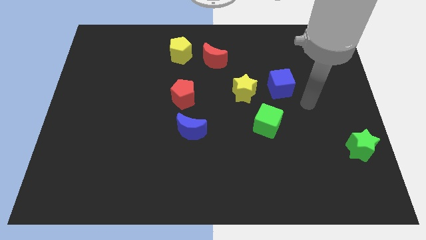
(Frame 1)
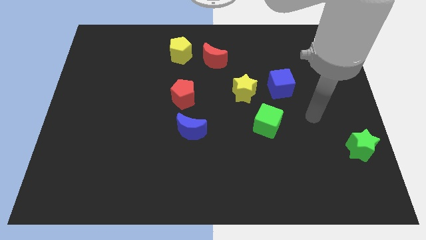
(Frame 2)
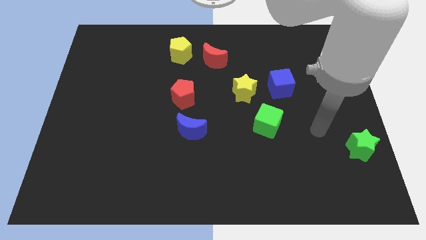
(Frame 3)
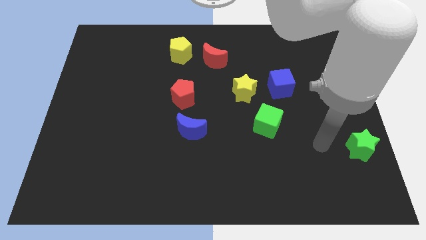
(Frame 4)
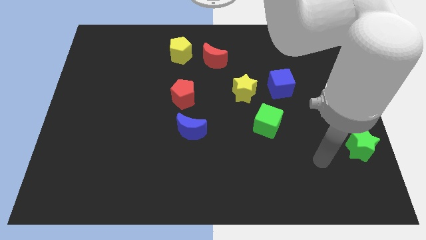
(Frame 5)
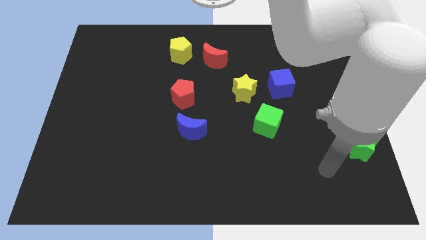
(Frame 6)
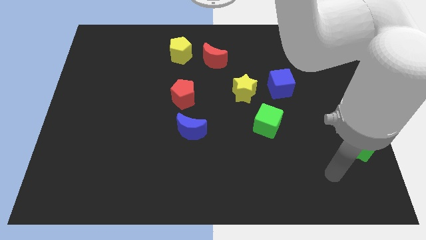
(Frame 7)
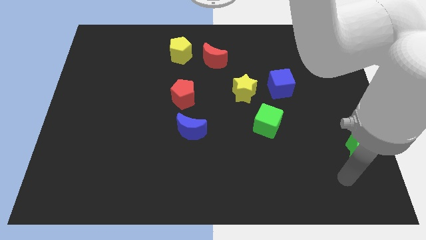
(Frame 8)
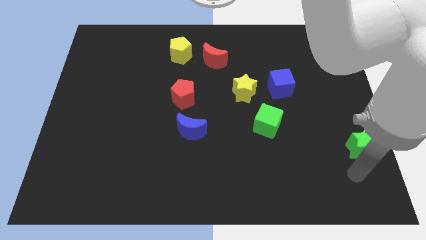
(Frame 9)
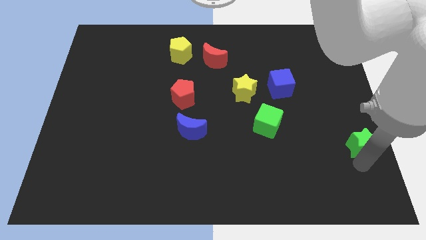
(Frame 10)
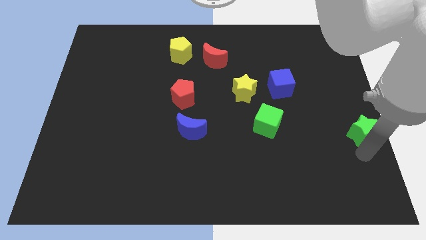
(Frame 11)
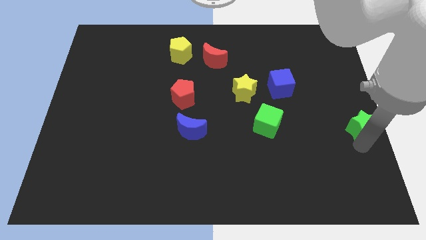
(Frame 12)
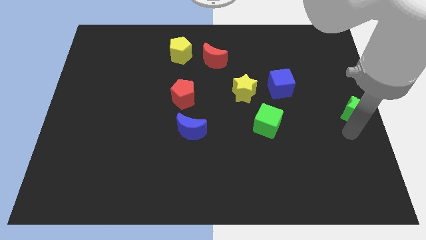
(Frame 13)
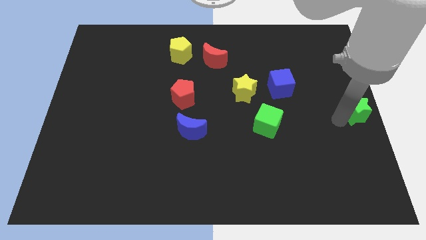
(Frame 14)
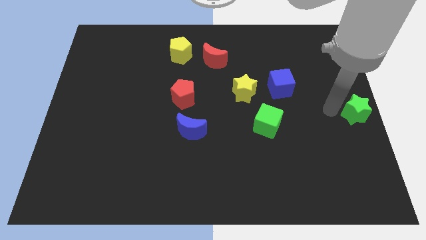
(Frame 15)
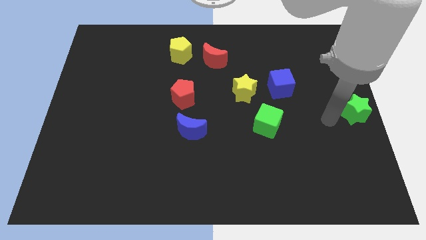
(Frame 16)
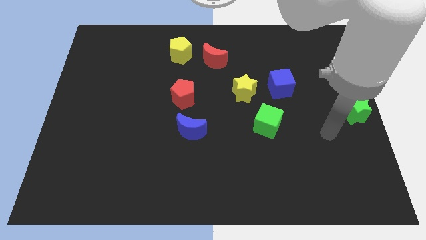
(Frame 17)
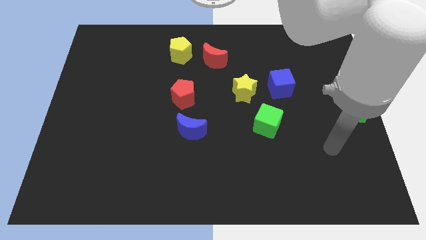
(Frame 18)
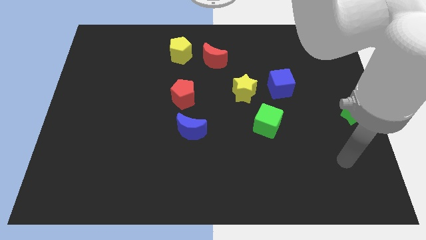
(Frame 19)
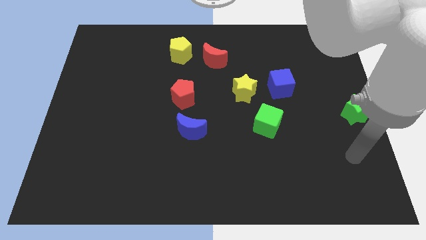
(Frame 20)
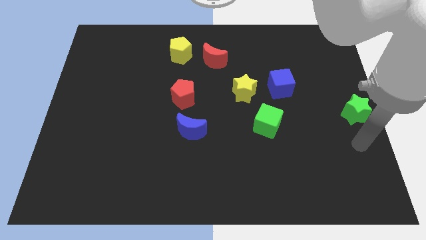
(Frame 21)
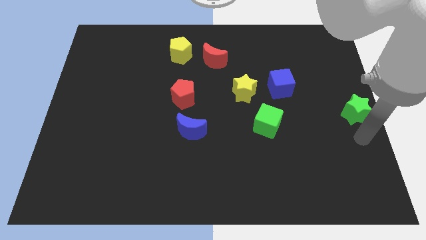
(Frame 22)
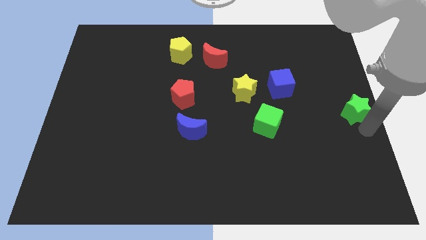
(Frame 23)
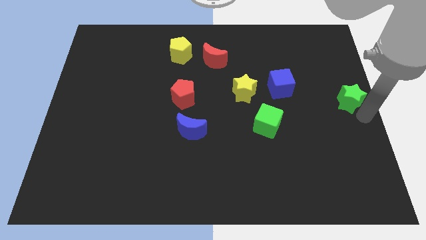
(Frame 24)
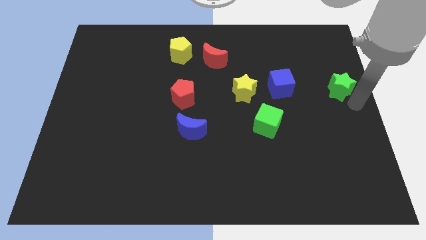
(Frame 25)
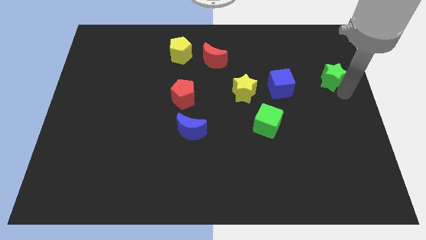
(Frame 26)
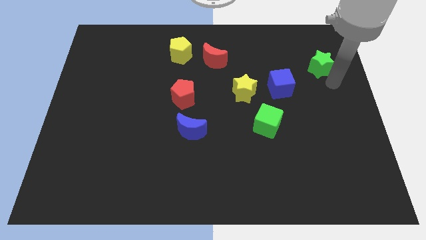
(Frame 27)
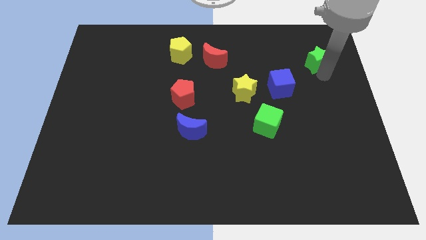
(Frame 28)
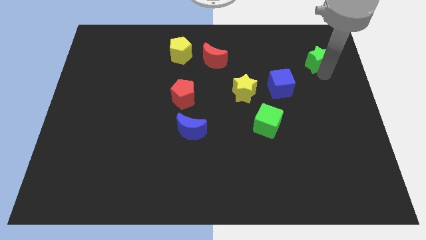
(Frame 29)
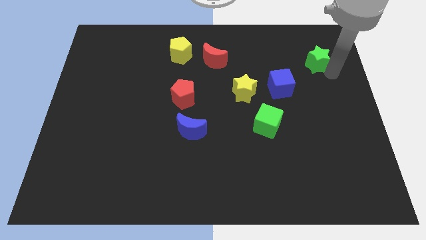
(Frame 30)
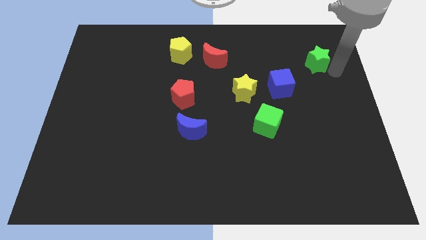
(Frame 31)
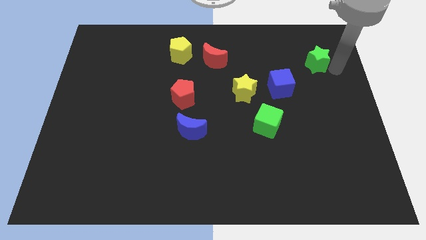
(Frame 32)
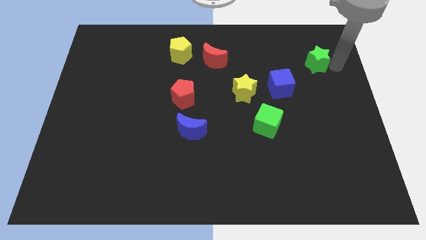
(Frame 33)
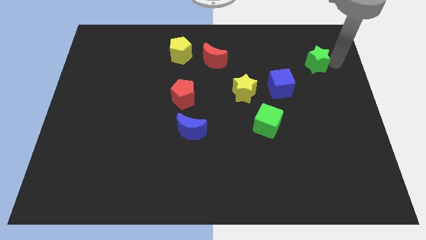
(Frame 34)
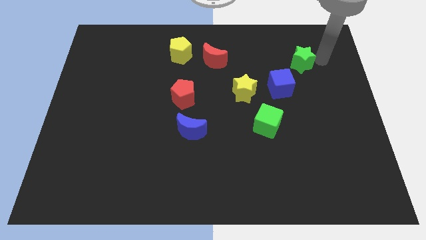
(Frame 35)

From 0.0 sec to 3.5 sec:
push the green star to the top right of the blue cube

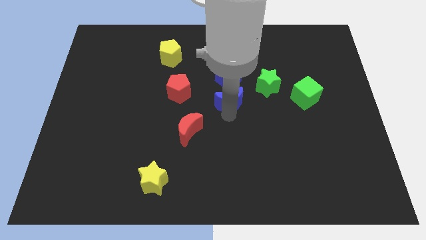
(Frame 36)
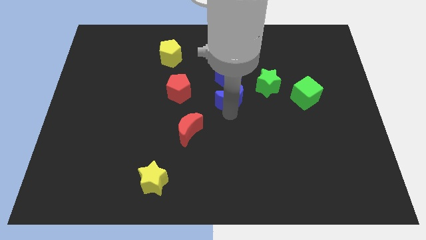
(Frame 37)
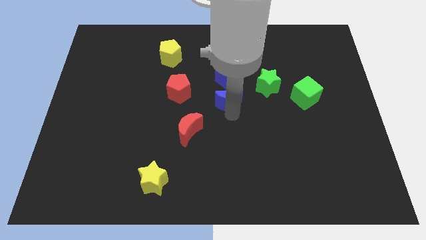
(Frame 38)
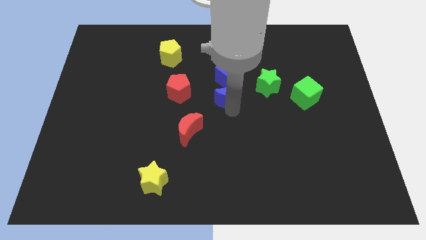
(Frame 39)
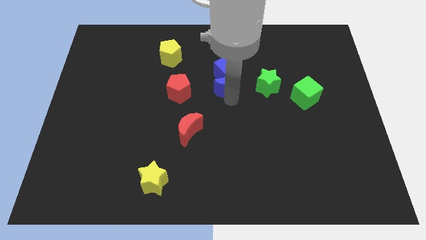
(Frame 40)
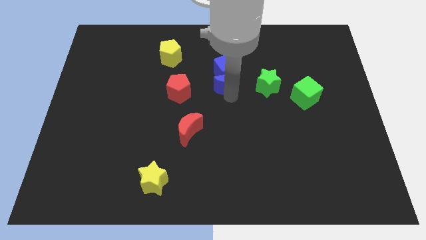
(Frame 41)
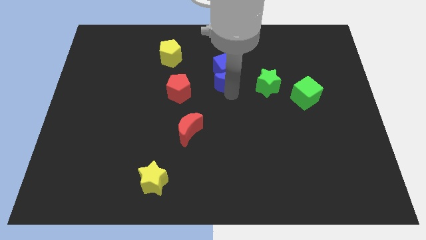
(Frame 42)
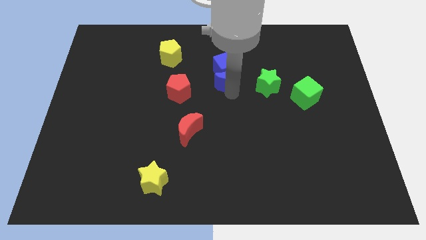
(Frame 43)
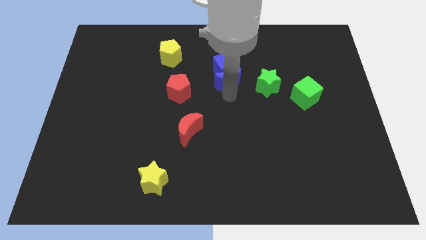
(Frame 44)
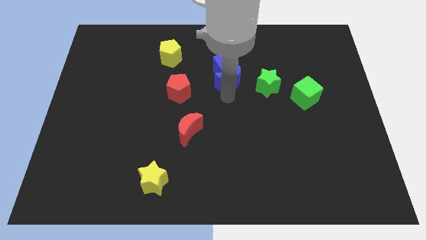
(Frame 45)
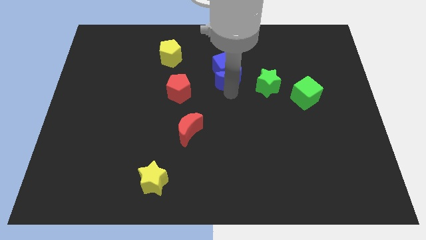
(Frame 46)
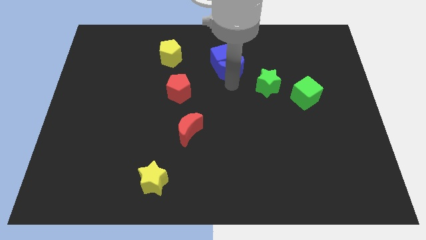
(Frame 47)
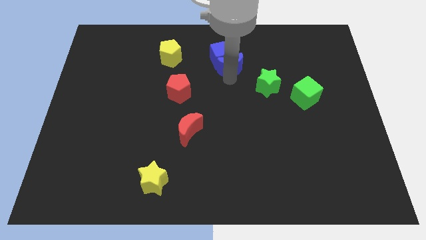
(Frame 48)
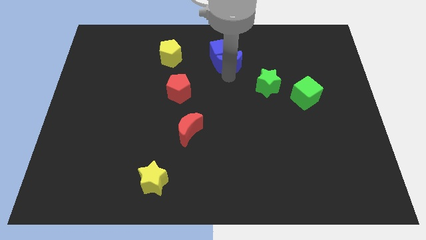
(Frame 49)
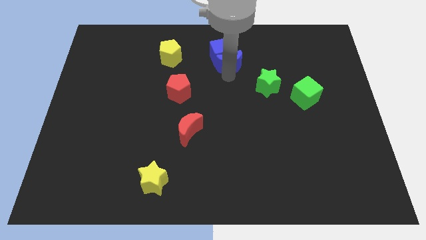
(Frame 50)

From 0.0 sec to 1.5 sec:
move the blue crescent along with the blue cube to the top centre

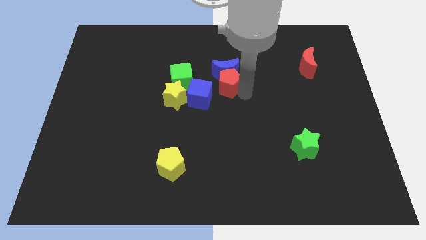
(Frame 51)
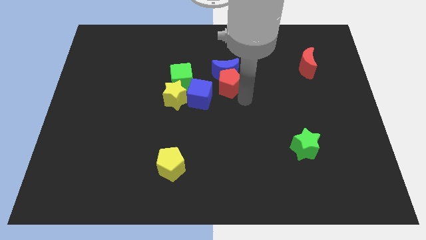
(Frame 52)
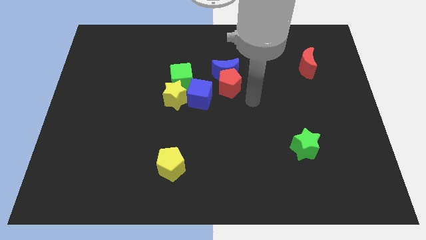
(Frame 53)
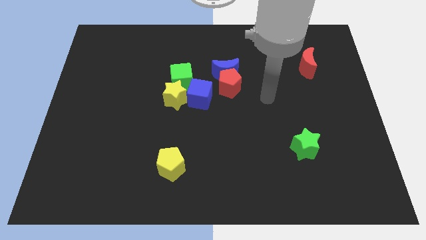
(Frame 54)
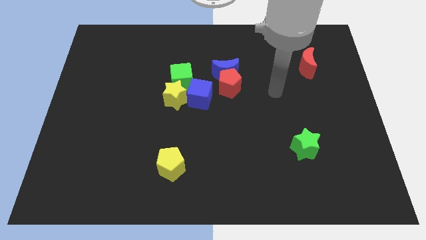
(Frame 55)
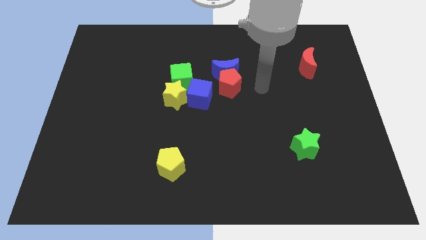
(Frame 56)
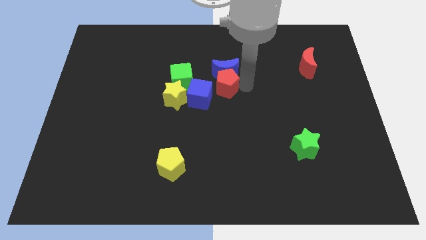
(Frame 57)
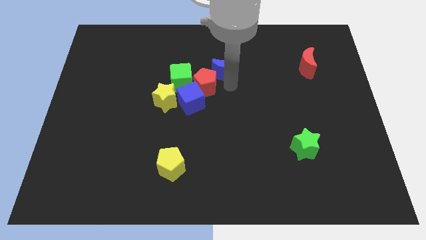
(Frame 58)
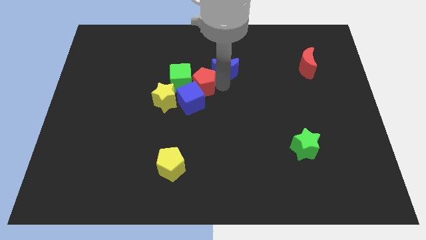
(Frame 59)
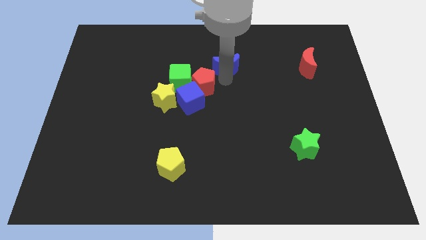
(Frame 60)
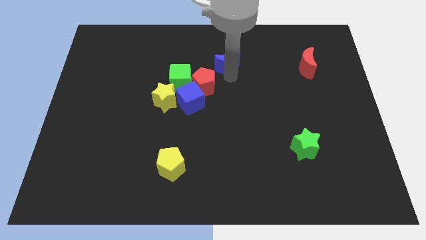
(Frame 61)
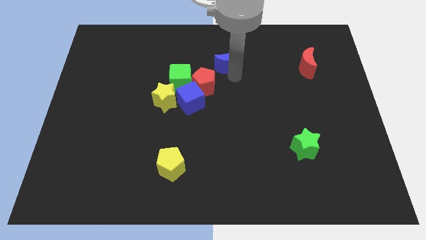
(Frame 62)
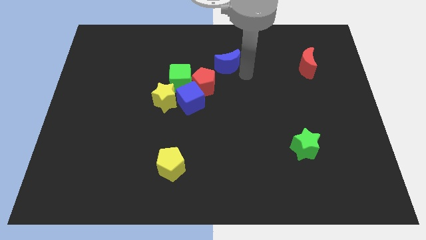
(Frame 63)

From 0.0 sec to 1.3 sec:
place the red pentagon into the group of blocks

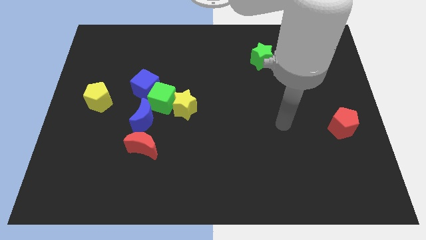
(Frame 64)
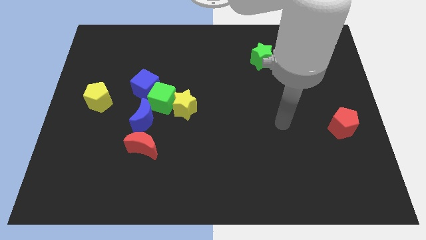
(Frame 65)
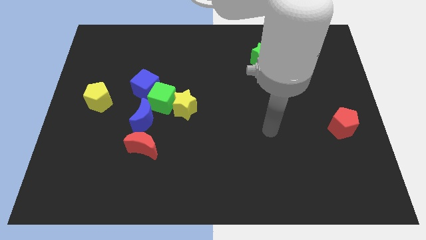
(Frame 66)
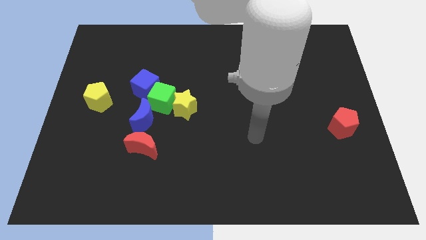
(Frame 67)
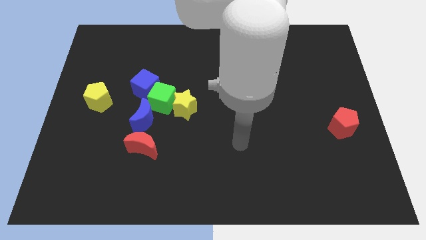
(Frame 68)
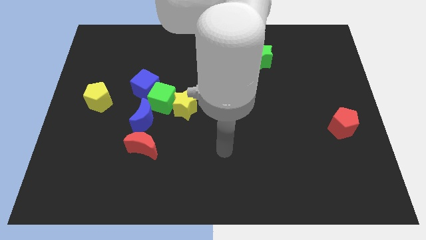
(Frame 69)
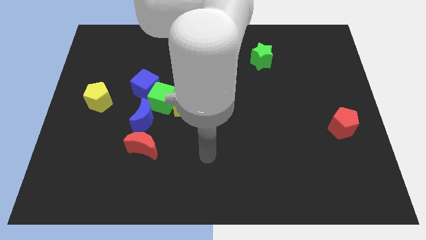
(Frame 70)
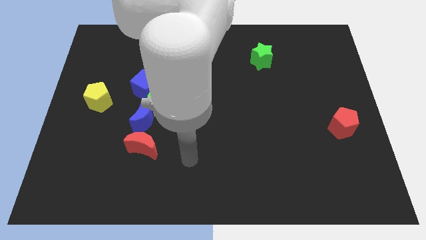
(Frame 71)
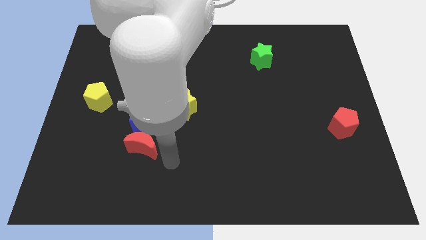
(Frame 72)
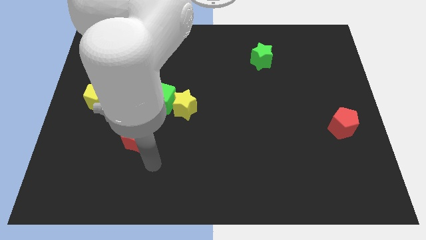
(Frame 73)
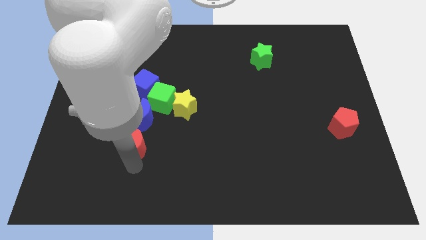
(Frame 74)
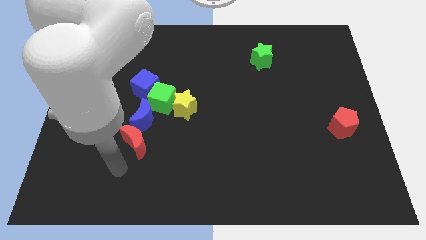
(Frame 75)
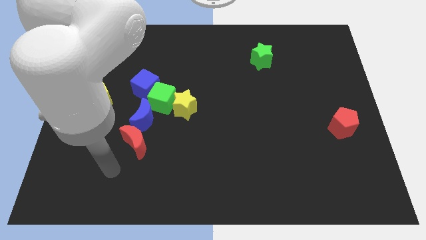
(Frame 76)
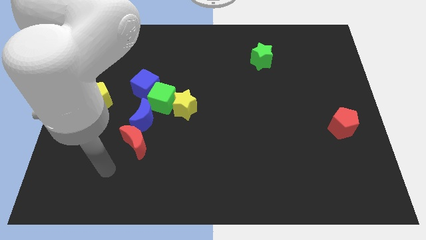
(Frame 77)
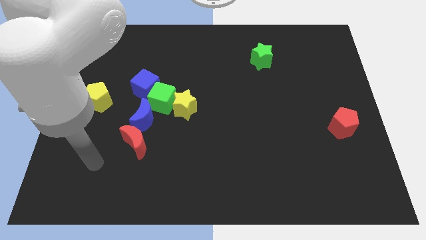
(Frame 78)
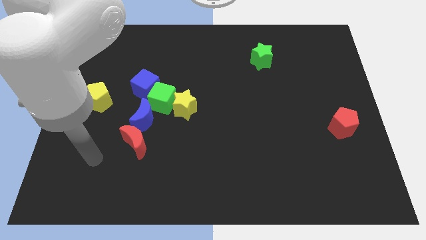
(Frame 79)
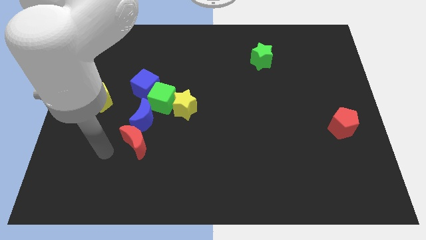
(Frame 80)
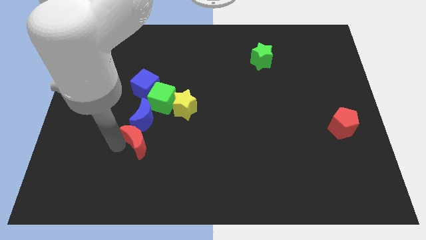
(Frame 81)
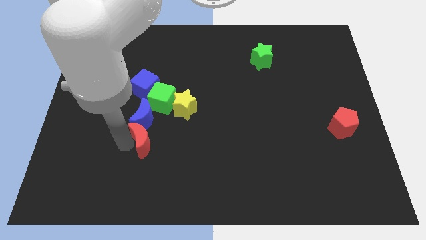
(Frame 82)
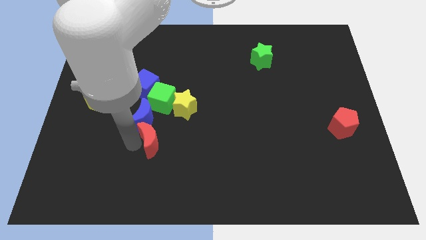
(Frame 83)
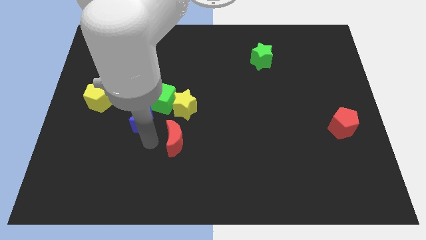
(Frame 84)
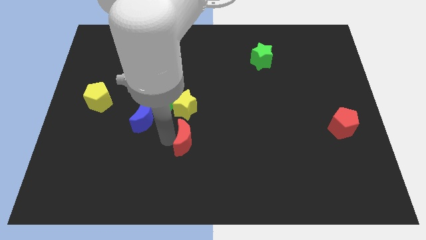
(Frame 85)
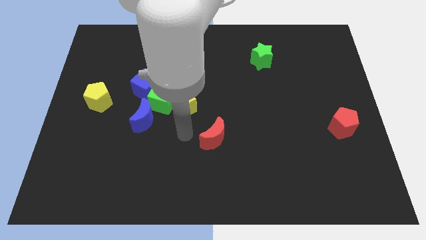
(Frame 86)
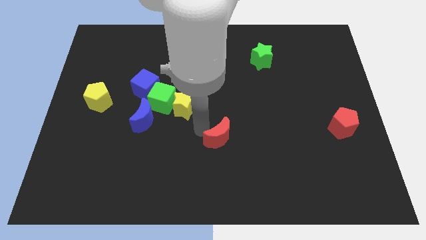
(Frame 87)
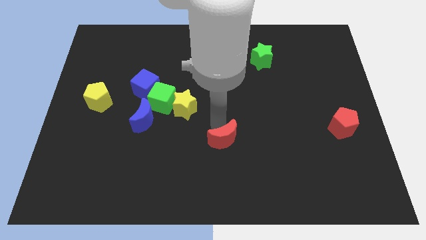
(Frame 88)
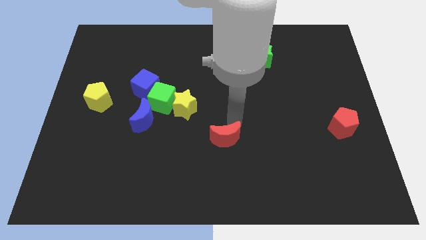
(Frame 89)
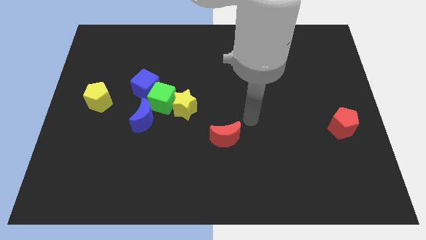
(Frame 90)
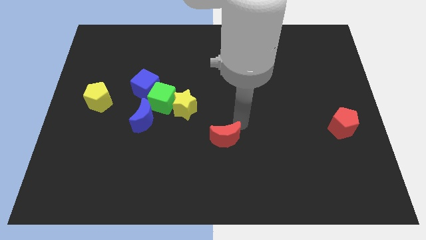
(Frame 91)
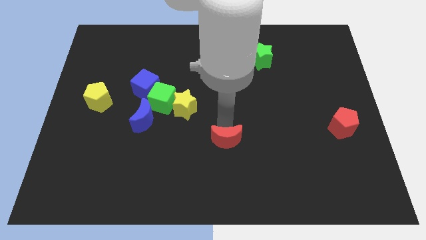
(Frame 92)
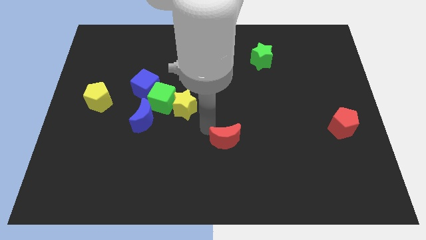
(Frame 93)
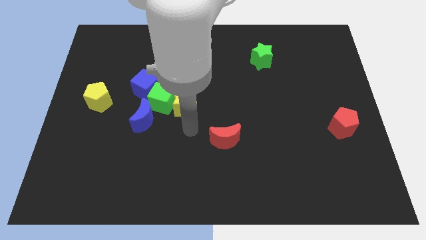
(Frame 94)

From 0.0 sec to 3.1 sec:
place the red moon diagonally to the yellow star
